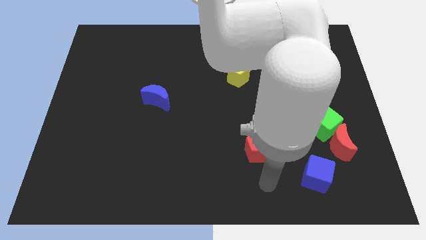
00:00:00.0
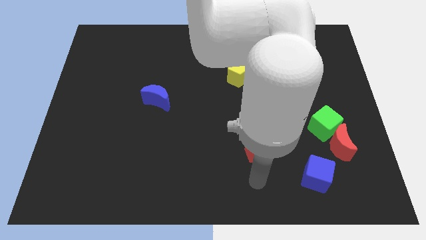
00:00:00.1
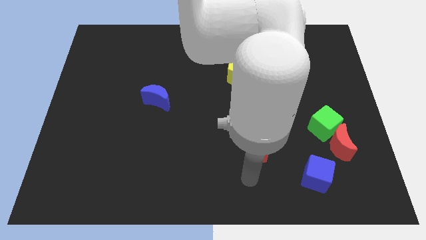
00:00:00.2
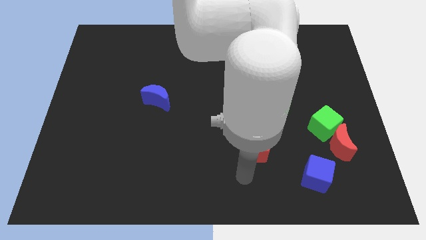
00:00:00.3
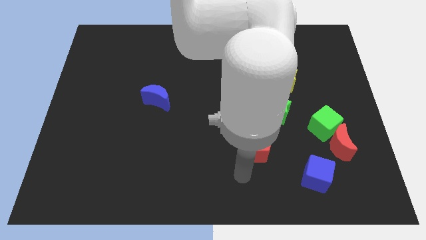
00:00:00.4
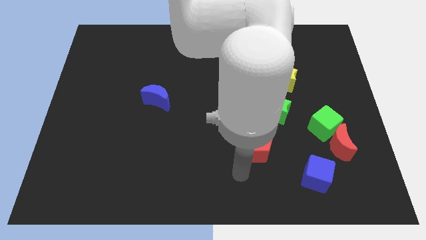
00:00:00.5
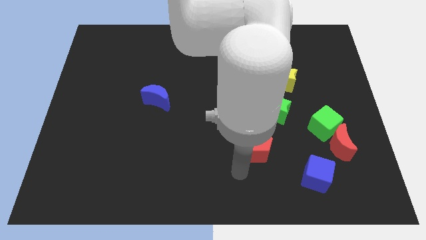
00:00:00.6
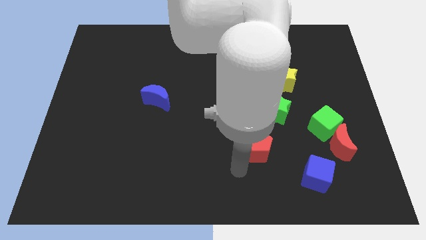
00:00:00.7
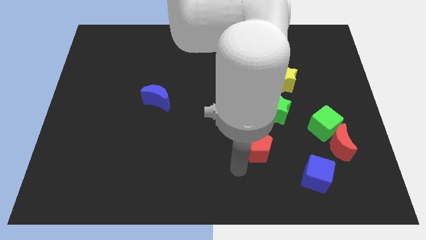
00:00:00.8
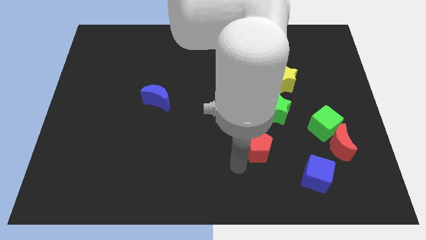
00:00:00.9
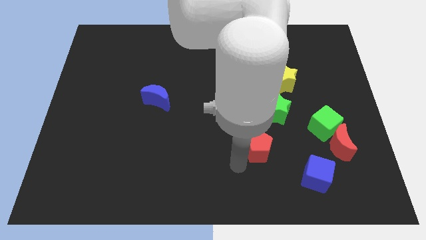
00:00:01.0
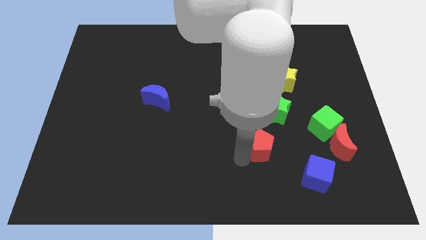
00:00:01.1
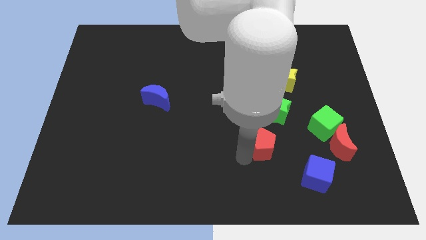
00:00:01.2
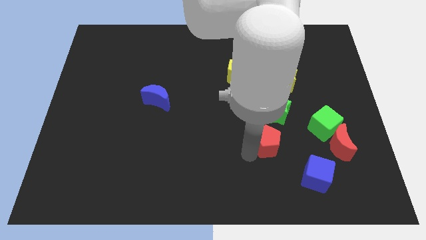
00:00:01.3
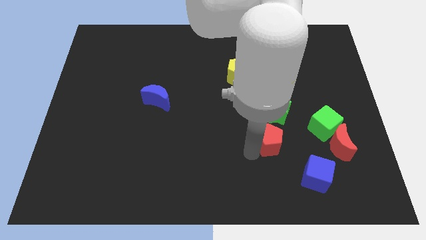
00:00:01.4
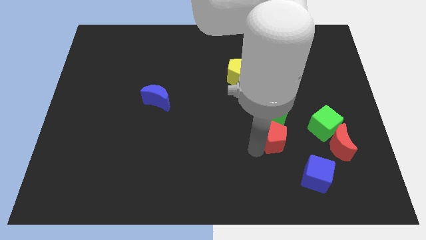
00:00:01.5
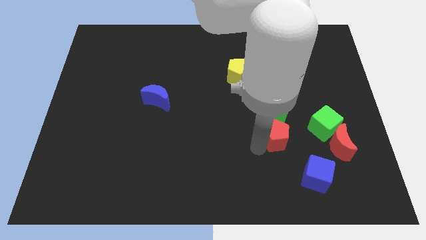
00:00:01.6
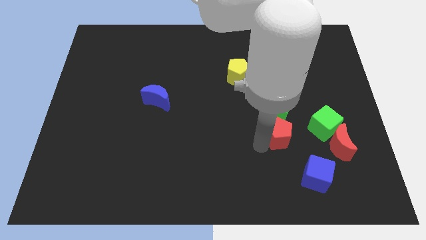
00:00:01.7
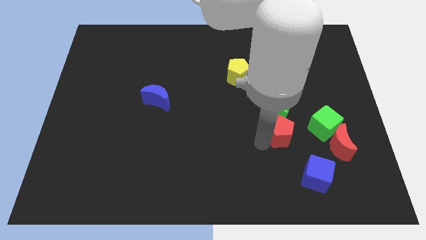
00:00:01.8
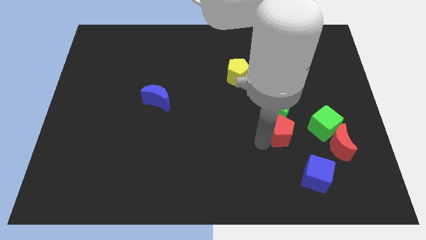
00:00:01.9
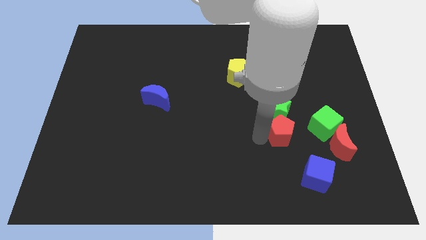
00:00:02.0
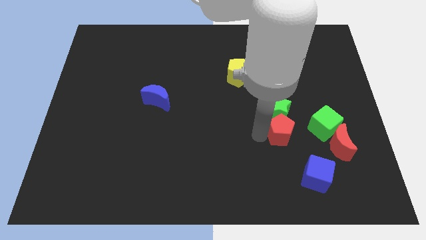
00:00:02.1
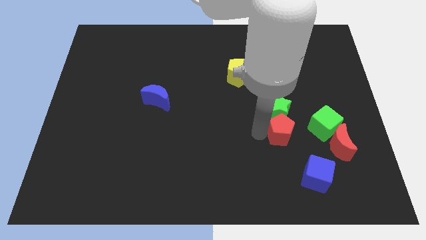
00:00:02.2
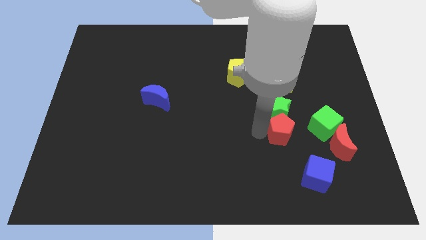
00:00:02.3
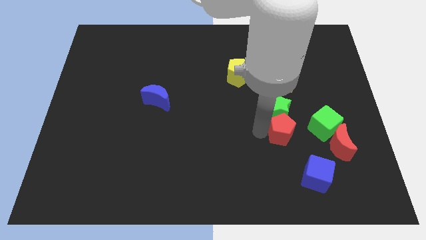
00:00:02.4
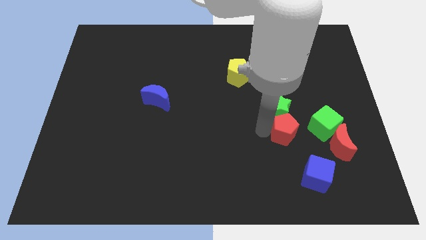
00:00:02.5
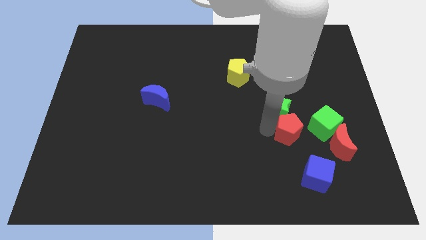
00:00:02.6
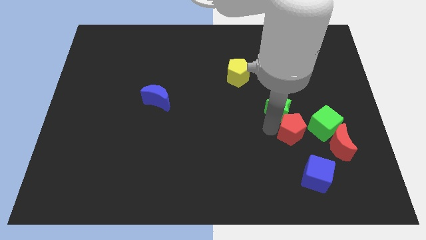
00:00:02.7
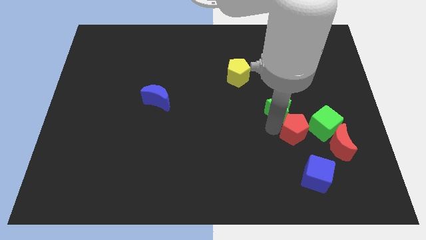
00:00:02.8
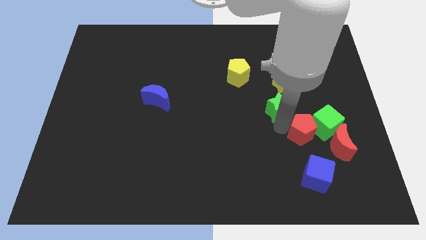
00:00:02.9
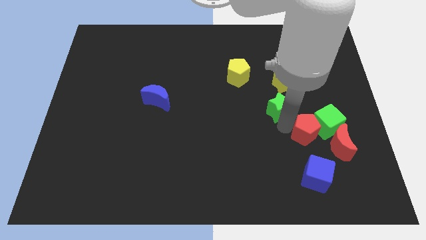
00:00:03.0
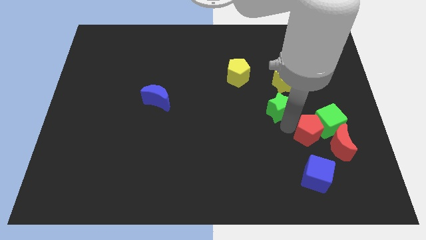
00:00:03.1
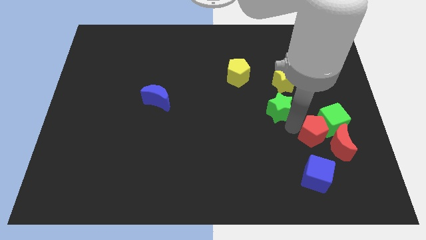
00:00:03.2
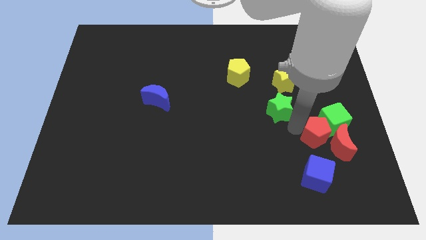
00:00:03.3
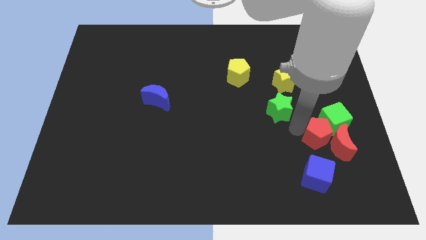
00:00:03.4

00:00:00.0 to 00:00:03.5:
push the red pentagon towards the red moon

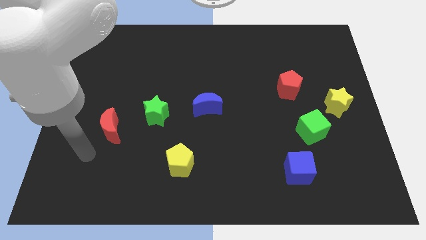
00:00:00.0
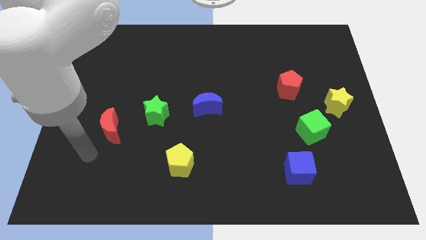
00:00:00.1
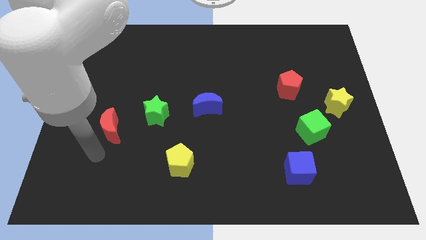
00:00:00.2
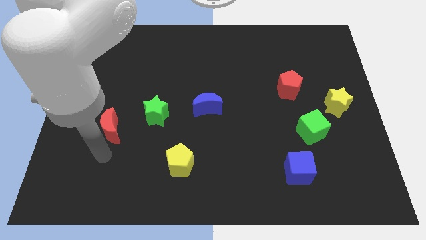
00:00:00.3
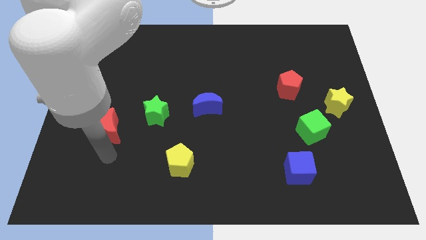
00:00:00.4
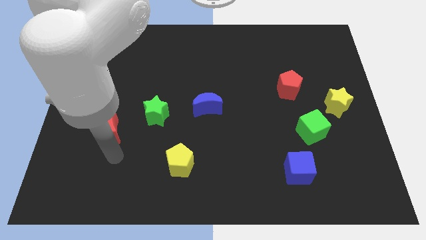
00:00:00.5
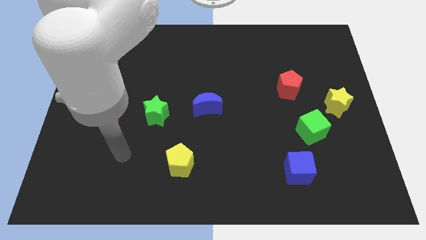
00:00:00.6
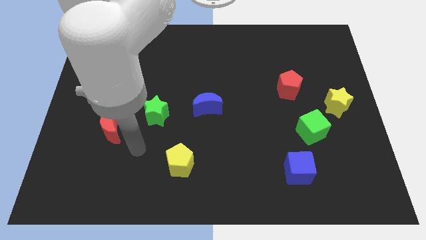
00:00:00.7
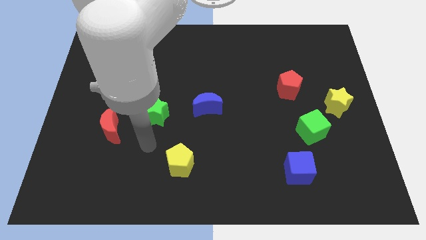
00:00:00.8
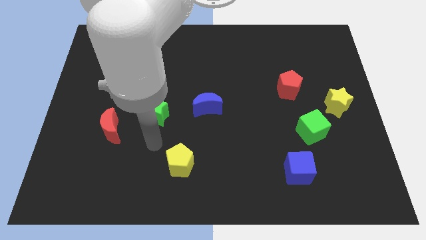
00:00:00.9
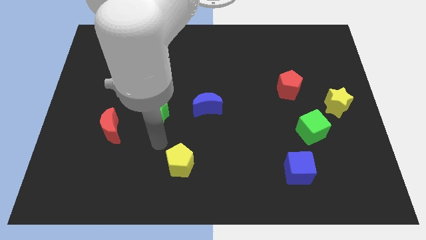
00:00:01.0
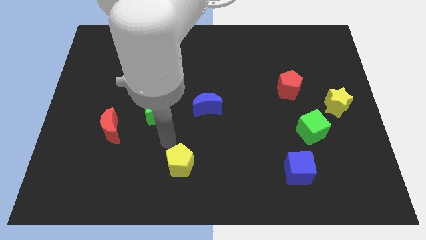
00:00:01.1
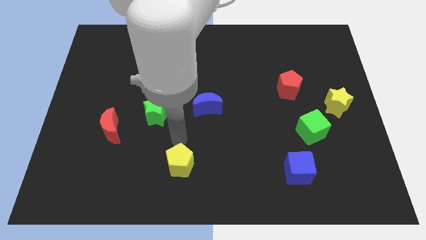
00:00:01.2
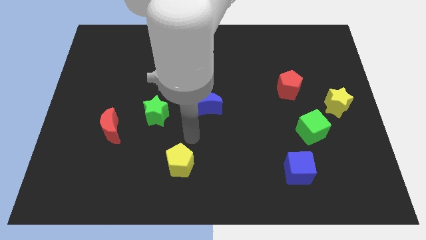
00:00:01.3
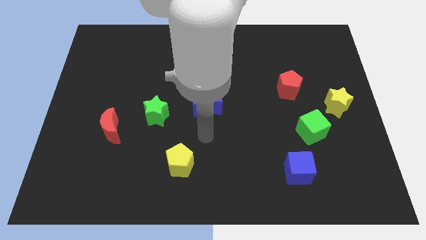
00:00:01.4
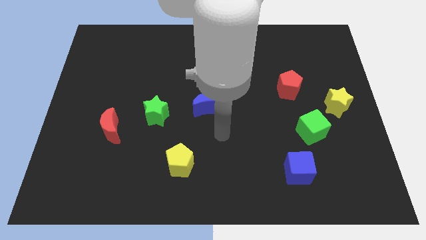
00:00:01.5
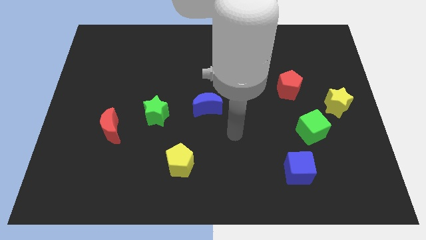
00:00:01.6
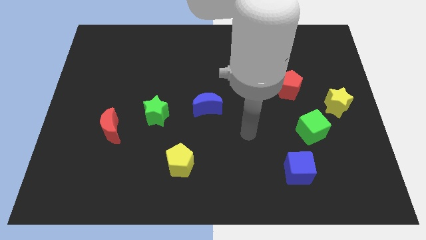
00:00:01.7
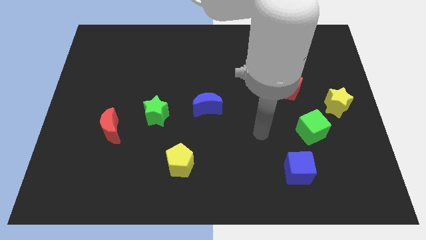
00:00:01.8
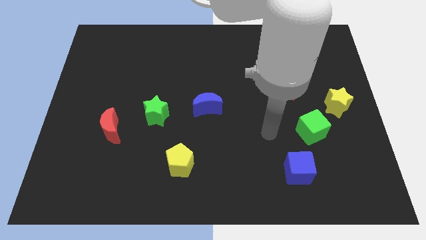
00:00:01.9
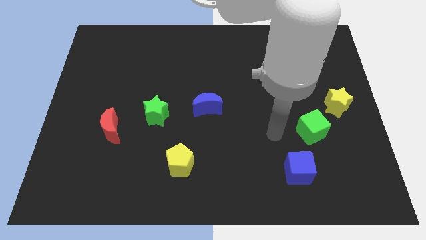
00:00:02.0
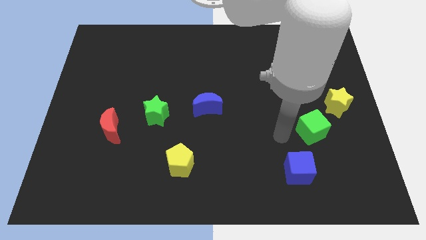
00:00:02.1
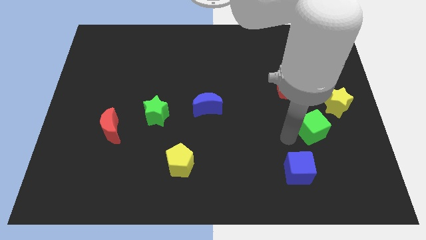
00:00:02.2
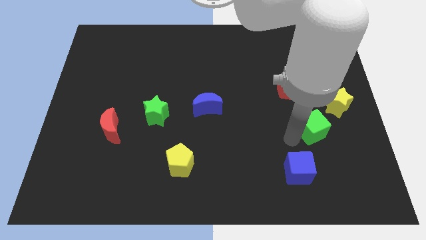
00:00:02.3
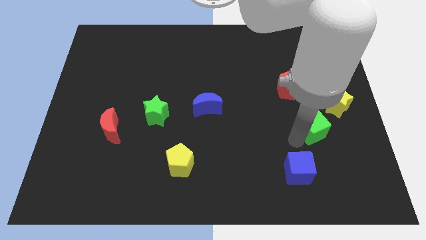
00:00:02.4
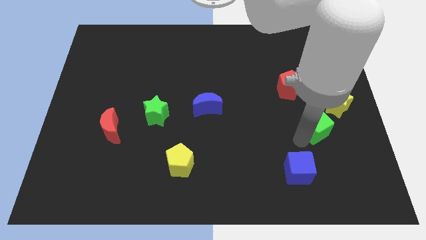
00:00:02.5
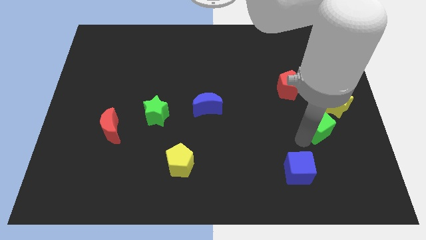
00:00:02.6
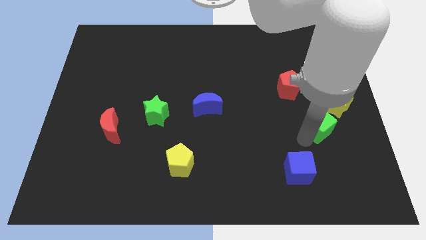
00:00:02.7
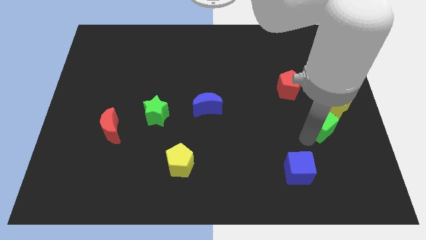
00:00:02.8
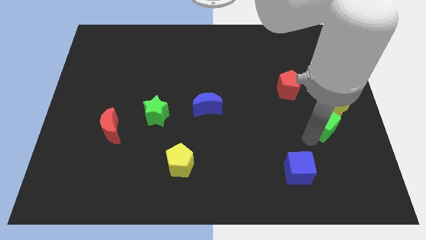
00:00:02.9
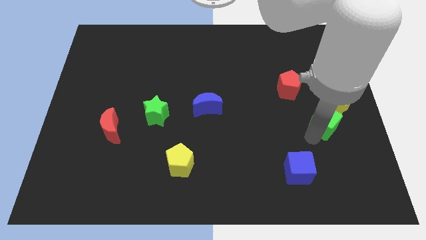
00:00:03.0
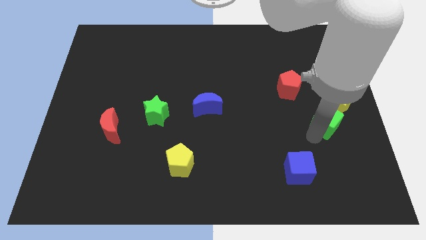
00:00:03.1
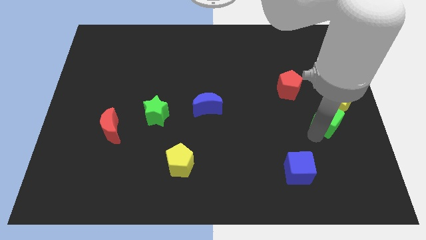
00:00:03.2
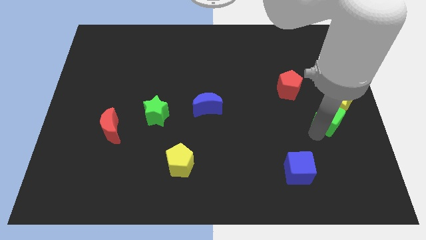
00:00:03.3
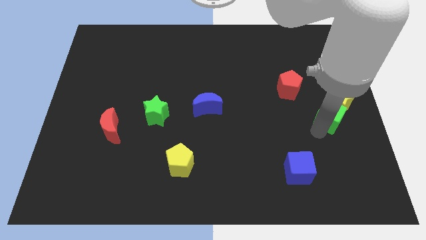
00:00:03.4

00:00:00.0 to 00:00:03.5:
move the green cube to the yellow star

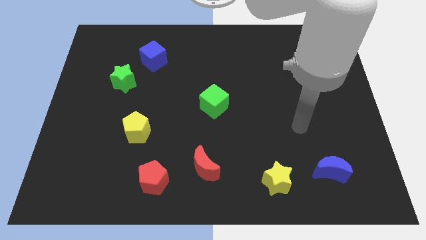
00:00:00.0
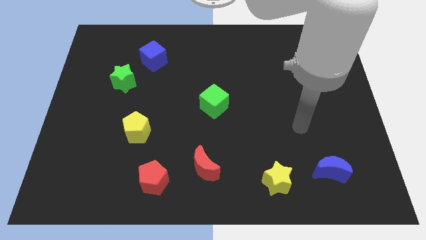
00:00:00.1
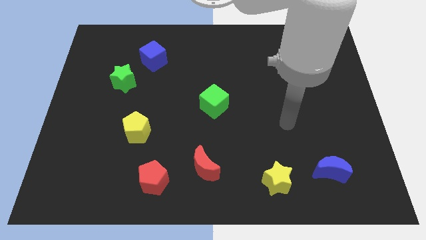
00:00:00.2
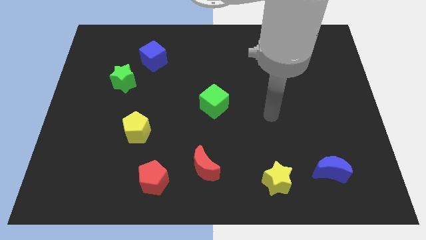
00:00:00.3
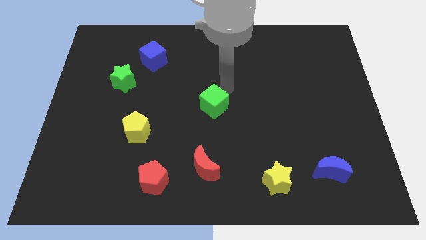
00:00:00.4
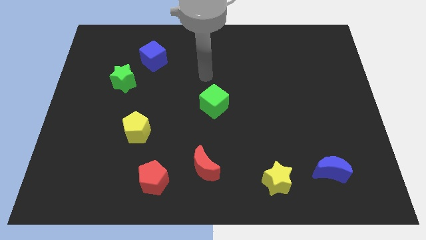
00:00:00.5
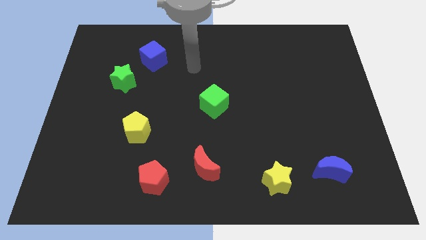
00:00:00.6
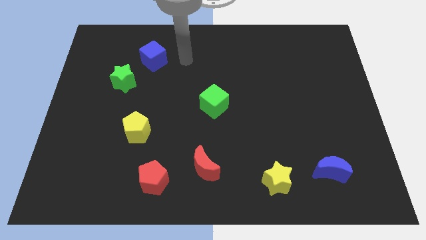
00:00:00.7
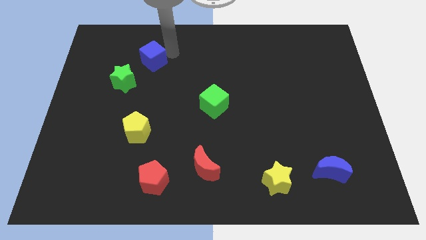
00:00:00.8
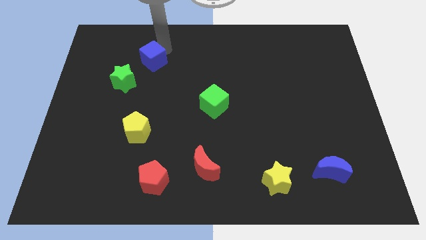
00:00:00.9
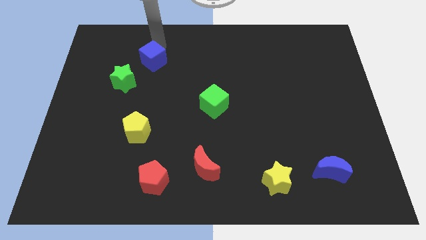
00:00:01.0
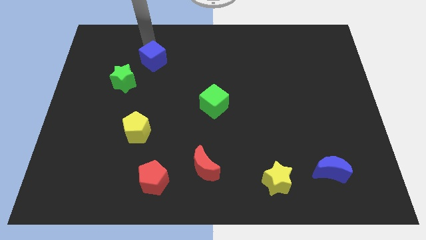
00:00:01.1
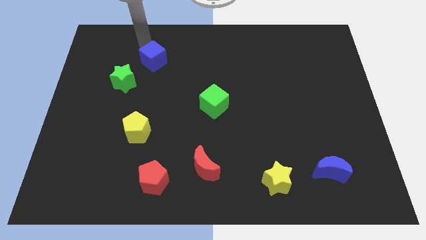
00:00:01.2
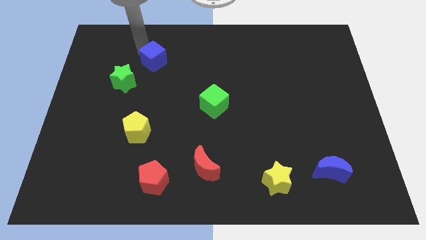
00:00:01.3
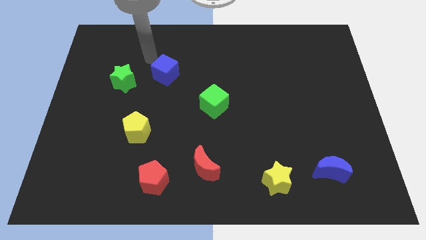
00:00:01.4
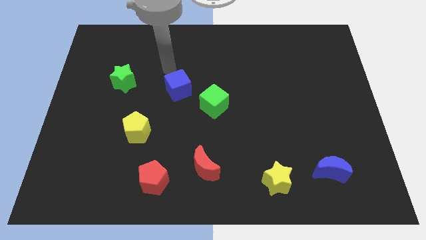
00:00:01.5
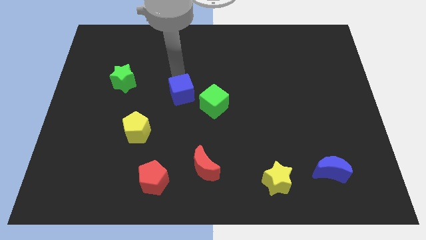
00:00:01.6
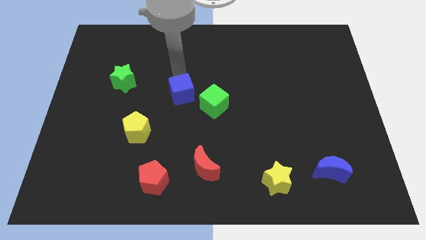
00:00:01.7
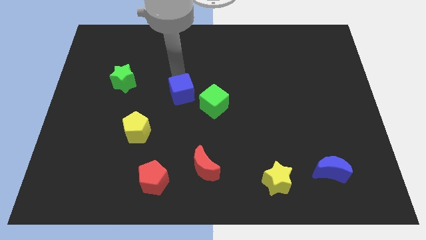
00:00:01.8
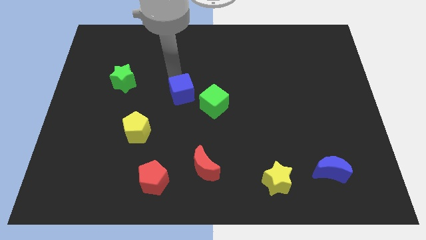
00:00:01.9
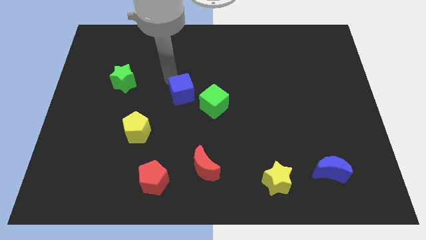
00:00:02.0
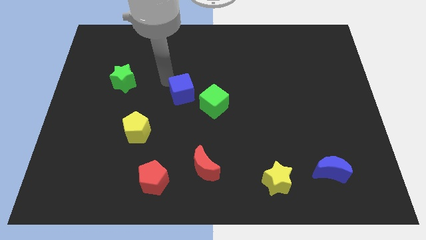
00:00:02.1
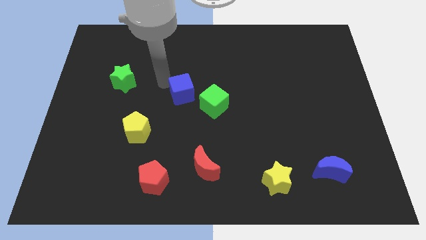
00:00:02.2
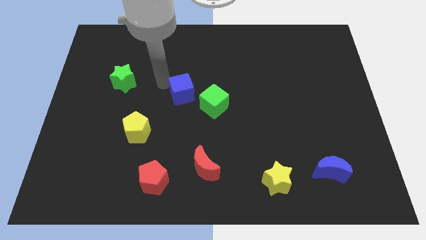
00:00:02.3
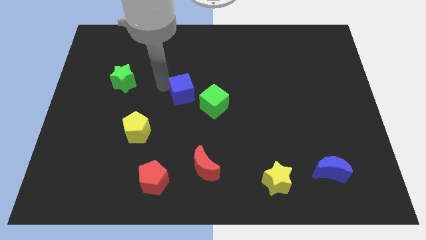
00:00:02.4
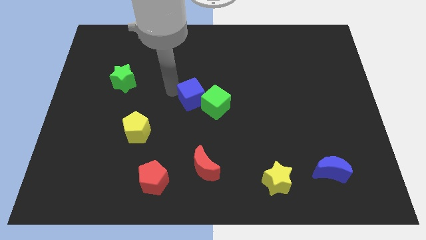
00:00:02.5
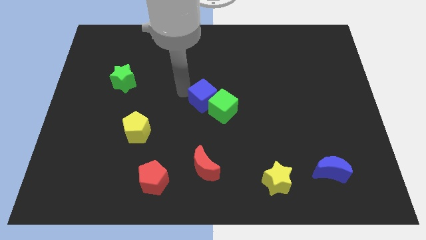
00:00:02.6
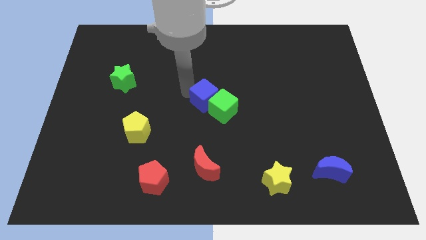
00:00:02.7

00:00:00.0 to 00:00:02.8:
slide the blue cube next to the green cube
